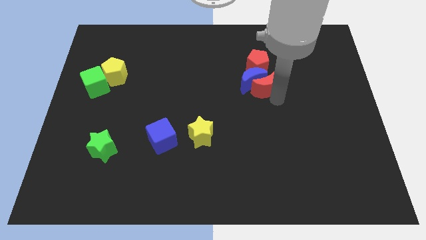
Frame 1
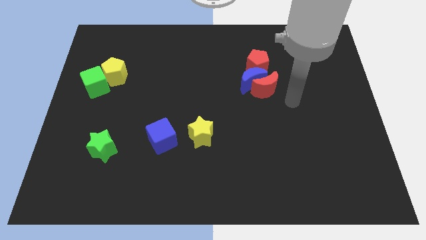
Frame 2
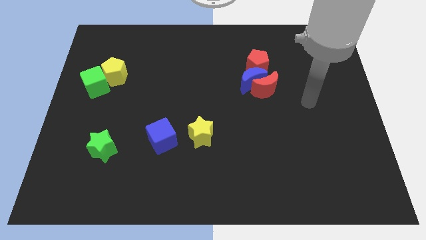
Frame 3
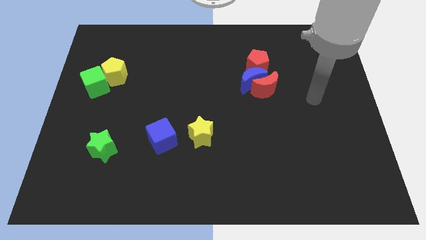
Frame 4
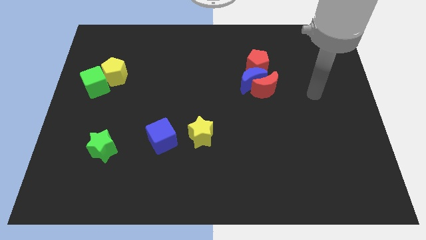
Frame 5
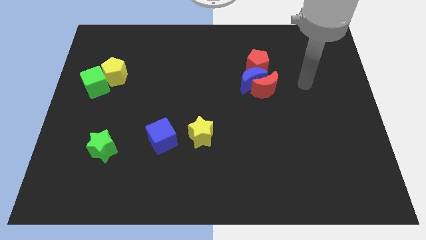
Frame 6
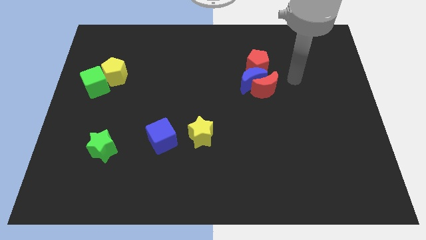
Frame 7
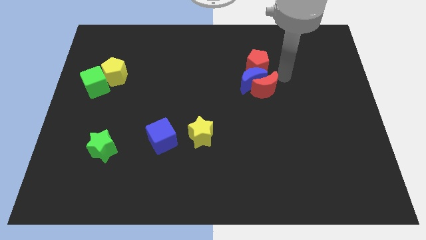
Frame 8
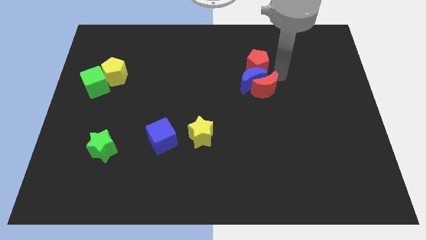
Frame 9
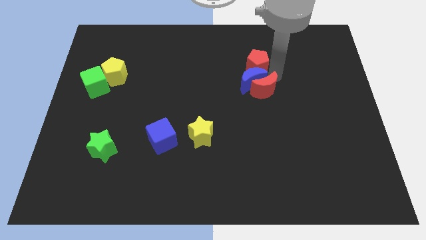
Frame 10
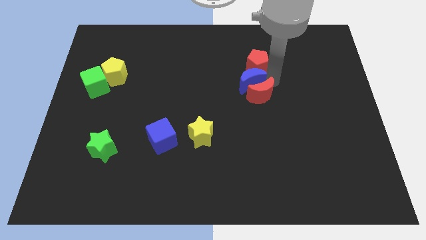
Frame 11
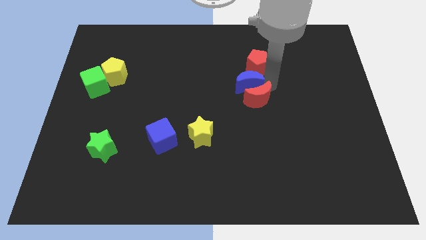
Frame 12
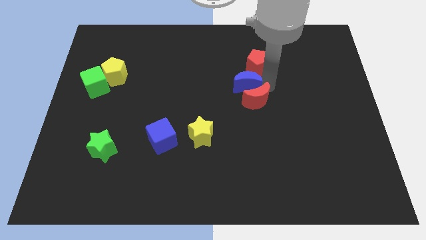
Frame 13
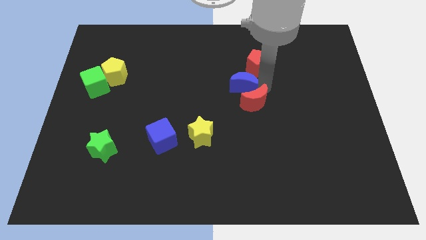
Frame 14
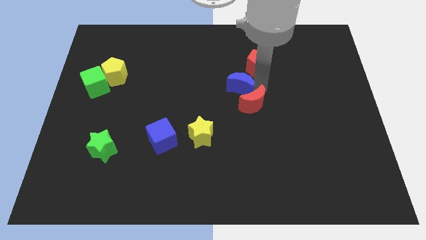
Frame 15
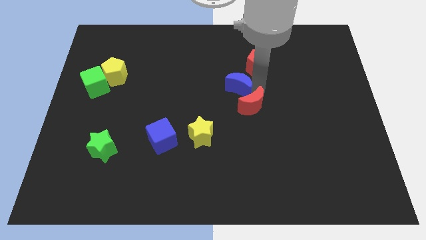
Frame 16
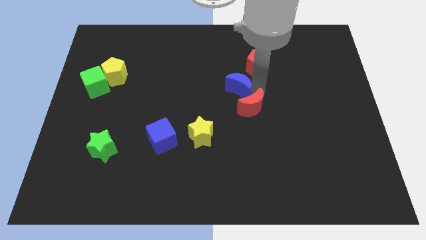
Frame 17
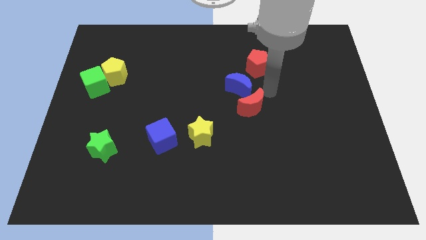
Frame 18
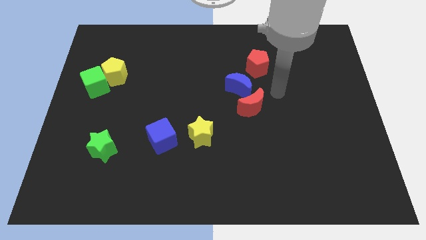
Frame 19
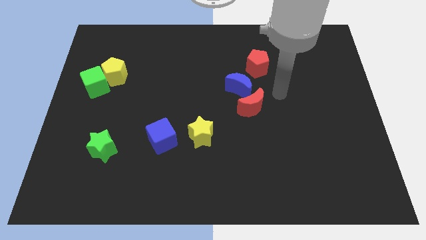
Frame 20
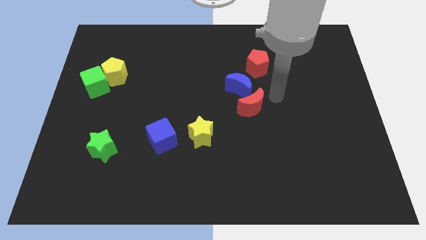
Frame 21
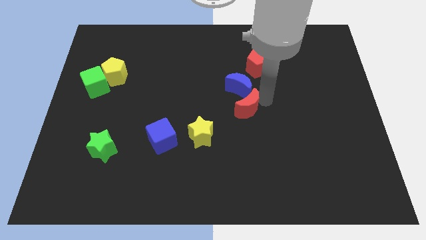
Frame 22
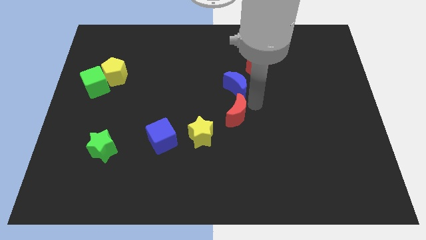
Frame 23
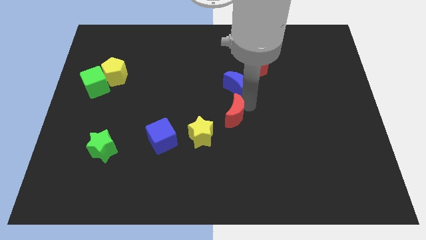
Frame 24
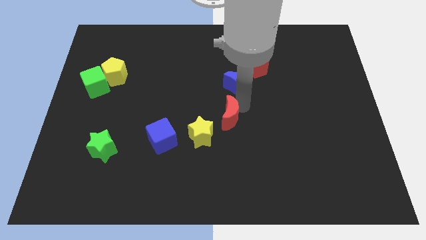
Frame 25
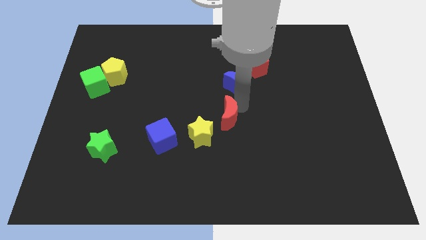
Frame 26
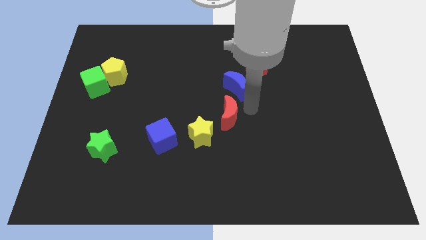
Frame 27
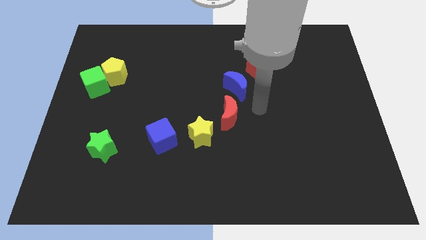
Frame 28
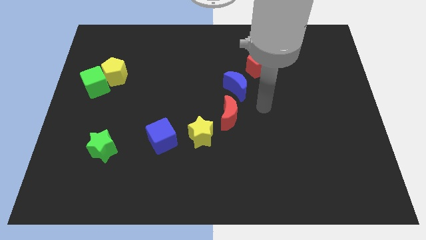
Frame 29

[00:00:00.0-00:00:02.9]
move red moon right above yellow star

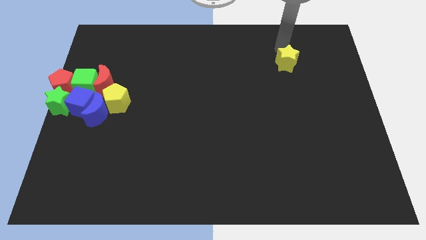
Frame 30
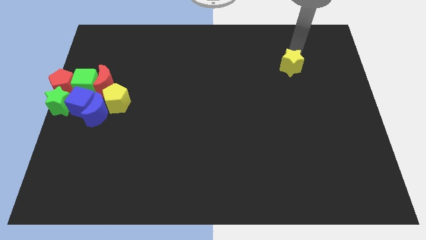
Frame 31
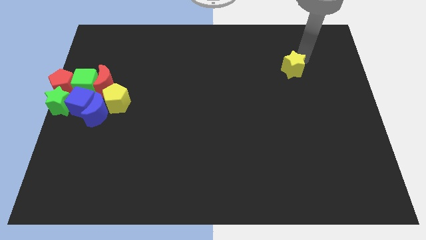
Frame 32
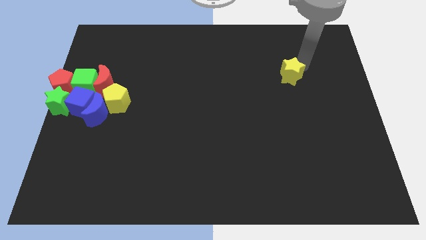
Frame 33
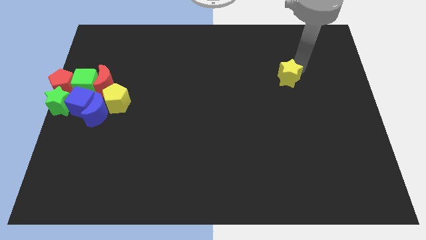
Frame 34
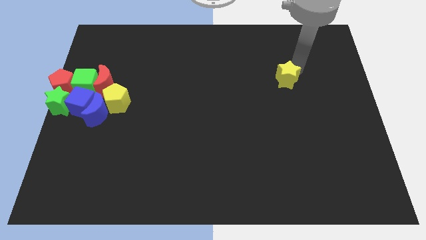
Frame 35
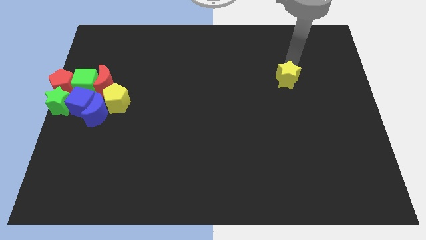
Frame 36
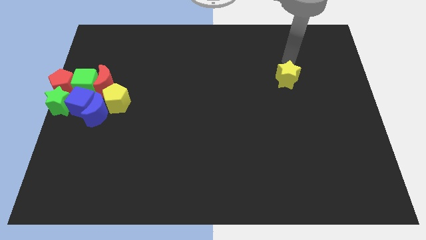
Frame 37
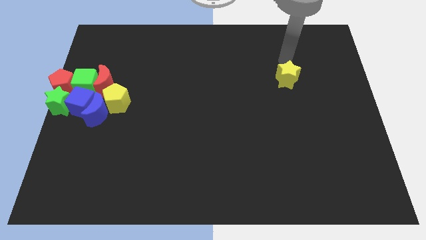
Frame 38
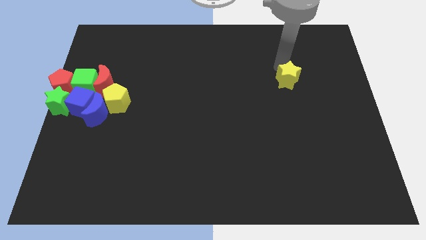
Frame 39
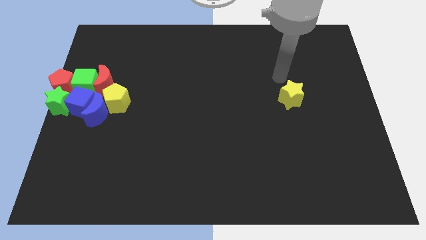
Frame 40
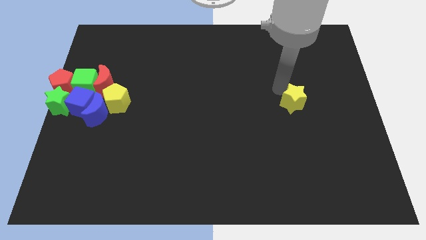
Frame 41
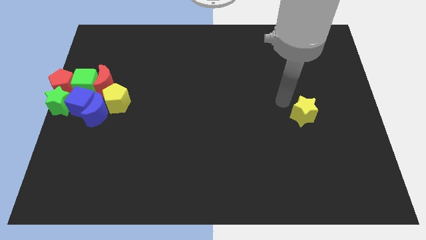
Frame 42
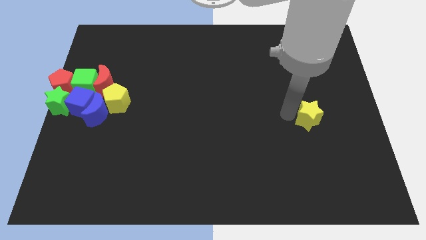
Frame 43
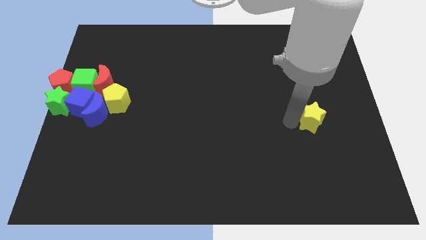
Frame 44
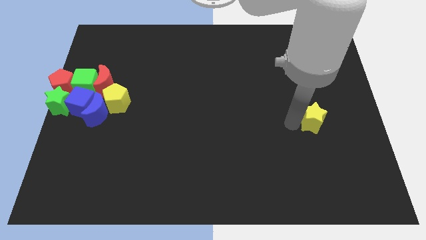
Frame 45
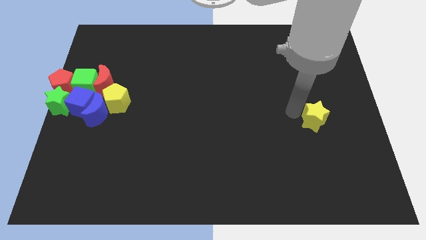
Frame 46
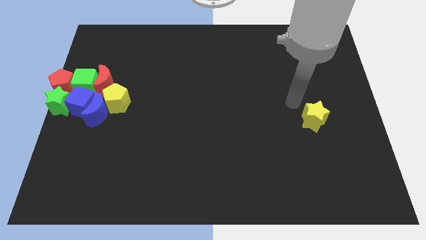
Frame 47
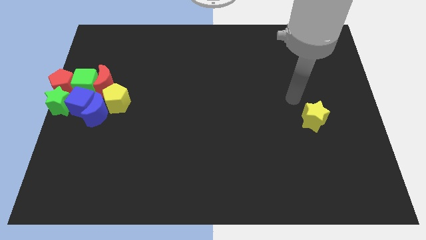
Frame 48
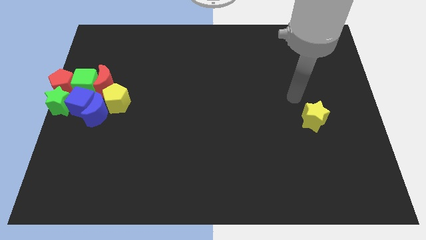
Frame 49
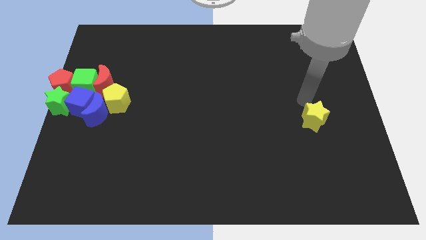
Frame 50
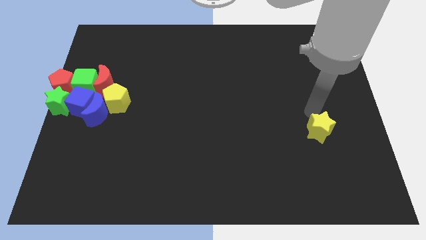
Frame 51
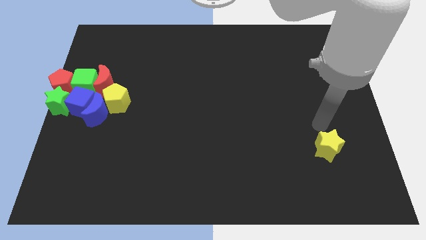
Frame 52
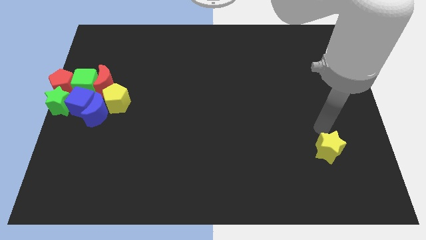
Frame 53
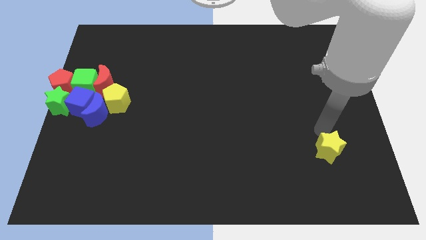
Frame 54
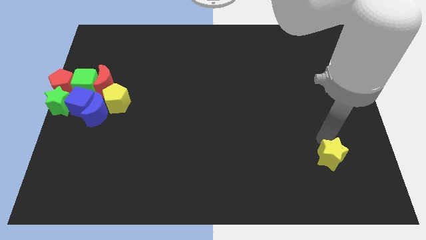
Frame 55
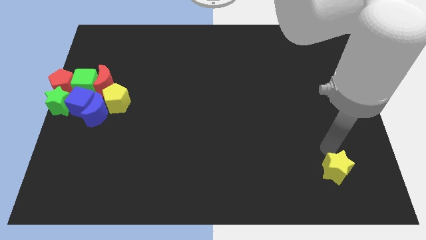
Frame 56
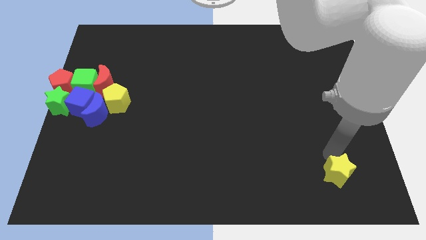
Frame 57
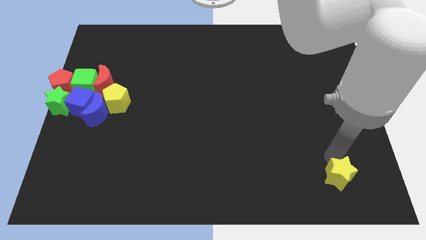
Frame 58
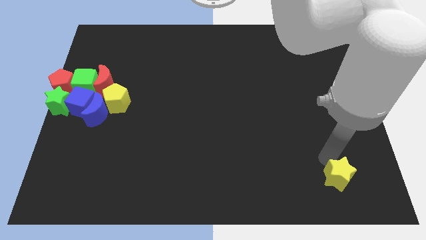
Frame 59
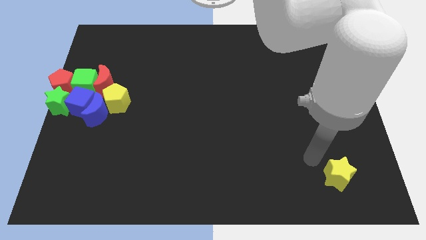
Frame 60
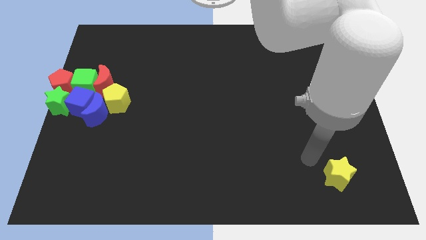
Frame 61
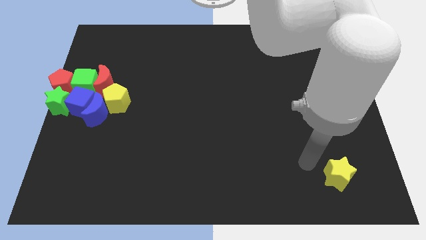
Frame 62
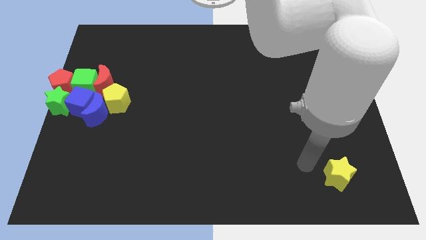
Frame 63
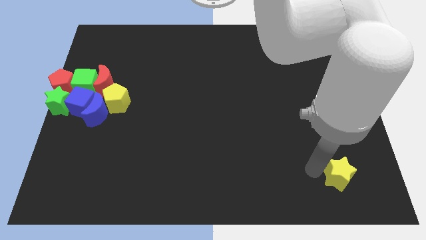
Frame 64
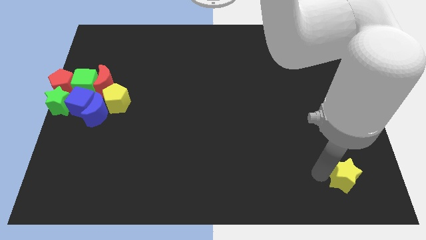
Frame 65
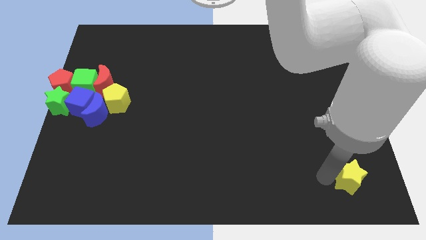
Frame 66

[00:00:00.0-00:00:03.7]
push the yellow star to the bottom side of the board

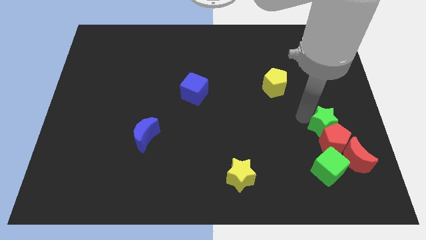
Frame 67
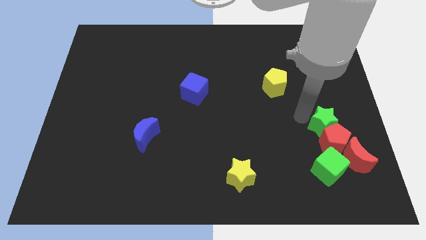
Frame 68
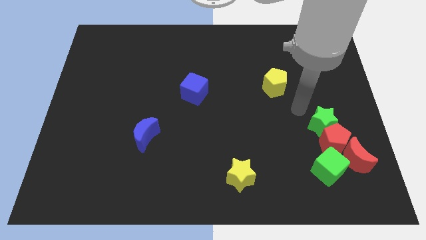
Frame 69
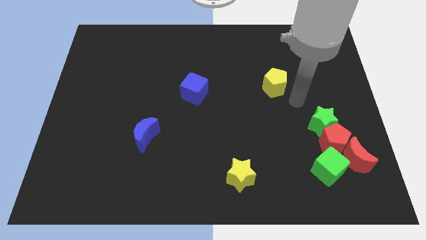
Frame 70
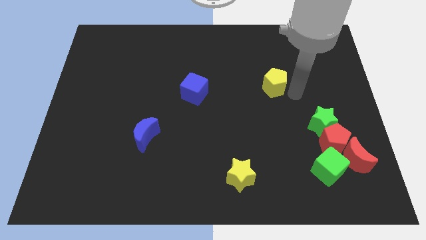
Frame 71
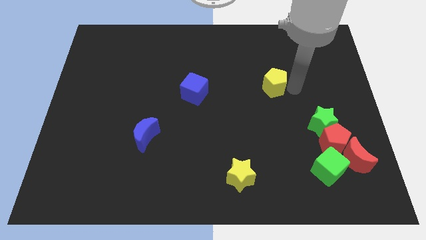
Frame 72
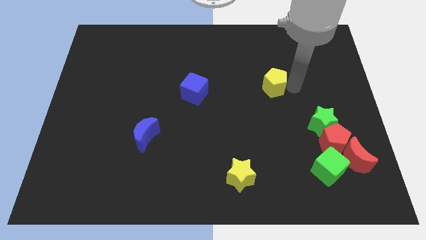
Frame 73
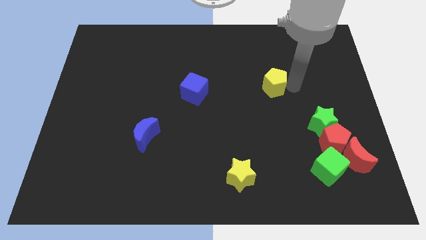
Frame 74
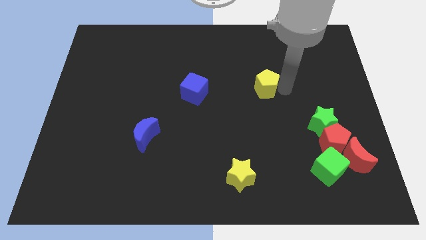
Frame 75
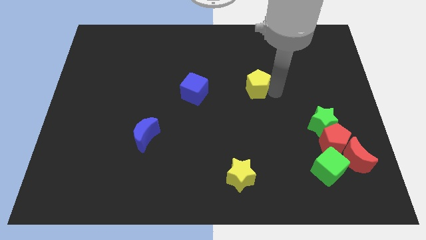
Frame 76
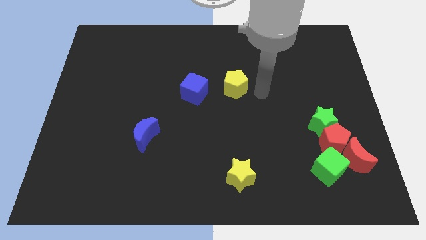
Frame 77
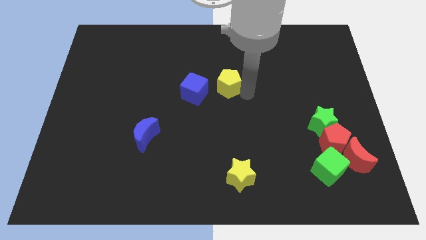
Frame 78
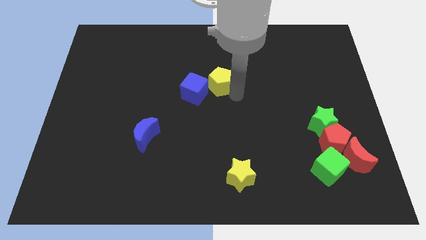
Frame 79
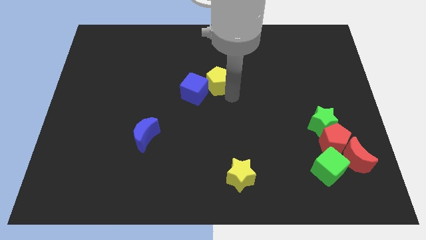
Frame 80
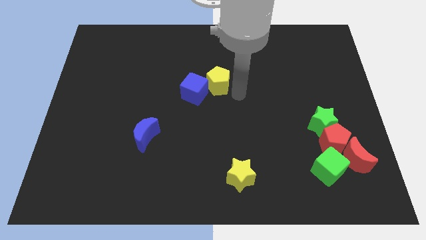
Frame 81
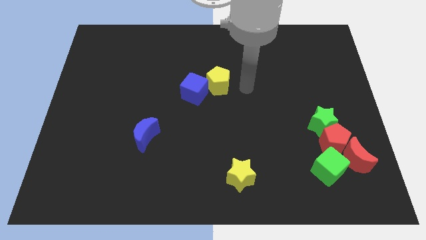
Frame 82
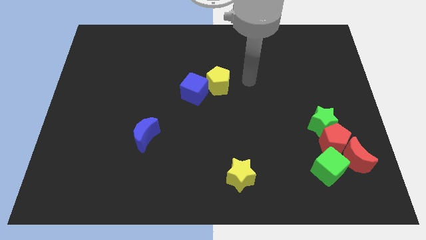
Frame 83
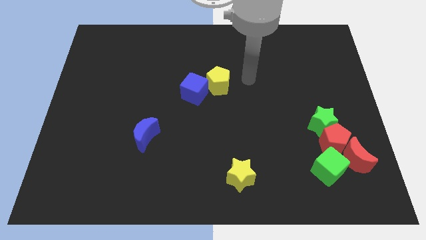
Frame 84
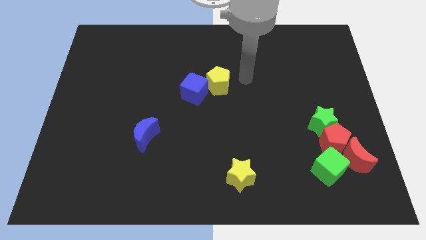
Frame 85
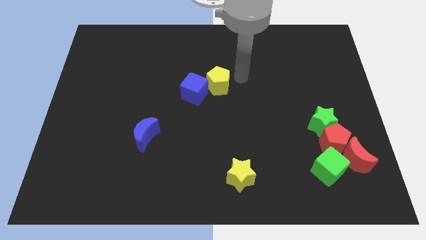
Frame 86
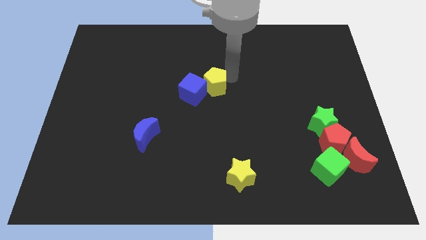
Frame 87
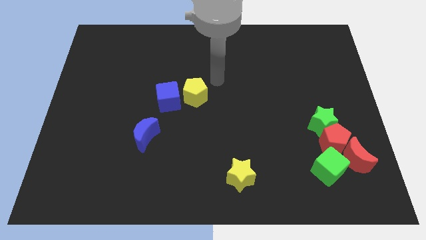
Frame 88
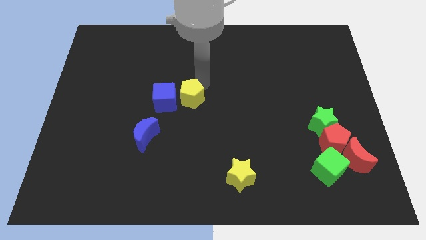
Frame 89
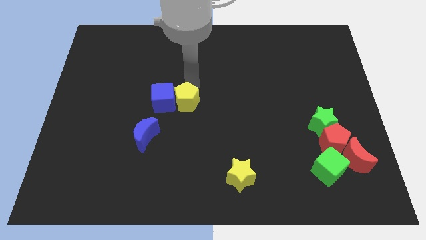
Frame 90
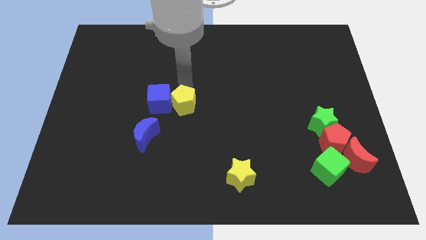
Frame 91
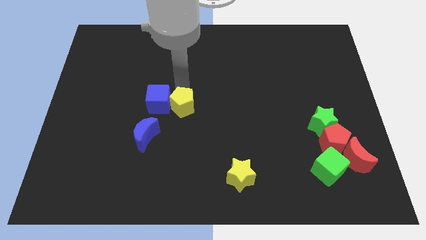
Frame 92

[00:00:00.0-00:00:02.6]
move the yellow pentagon into the blue cube
